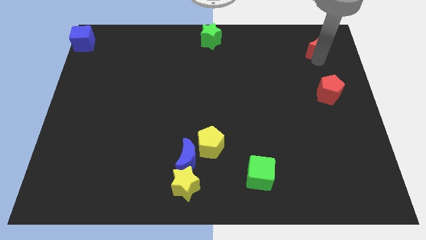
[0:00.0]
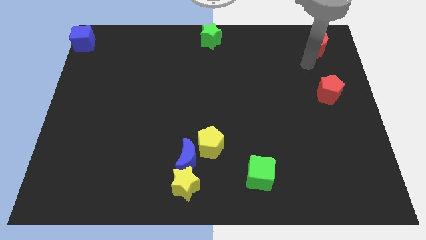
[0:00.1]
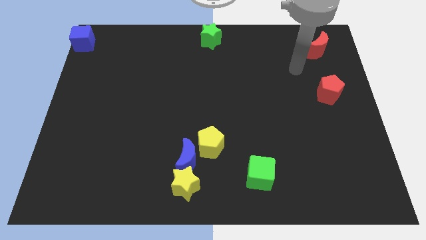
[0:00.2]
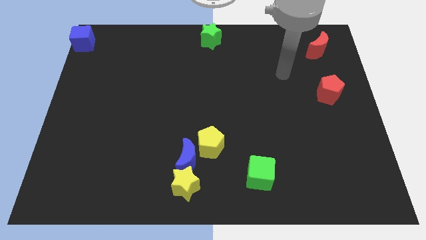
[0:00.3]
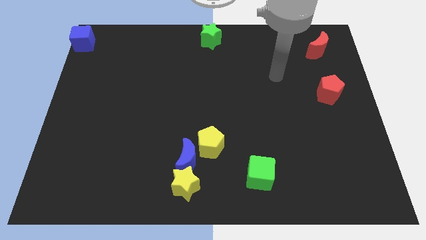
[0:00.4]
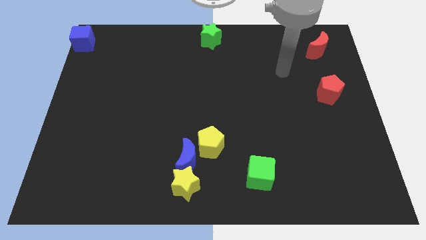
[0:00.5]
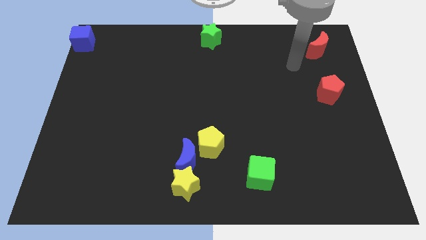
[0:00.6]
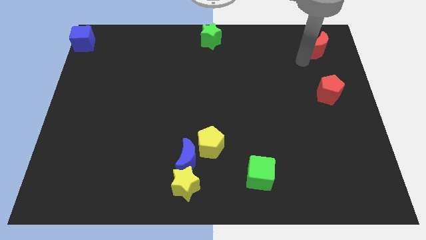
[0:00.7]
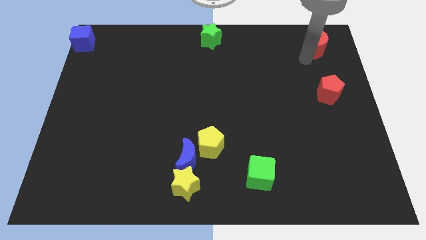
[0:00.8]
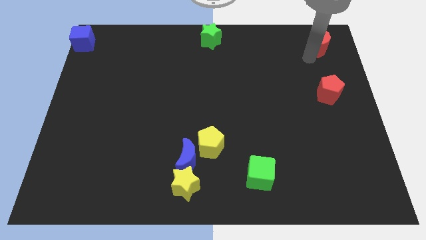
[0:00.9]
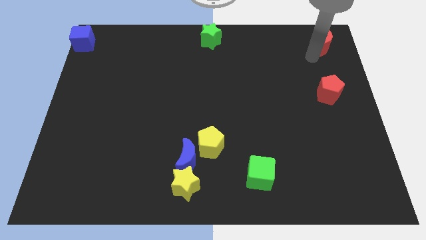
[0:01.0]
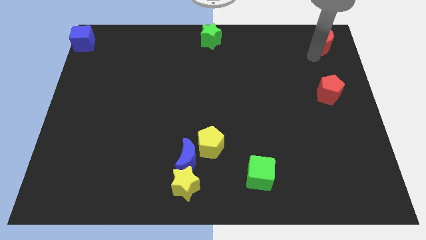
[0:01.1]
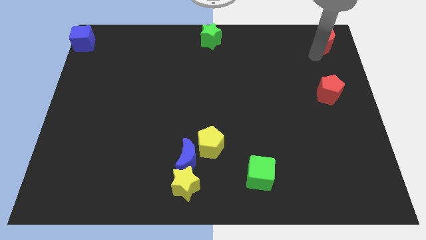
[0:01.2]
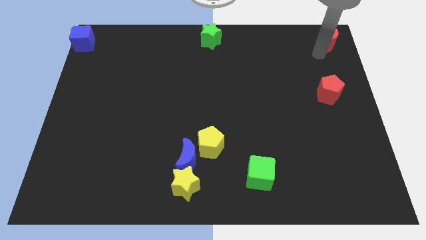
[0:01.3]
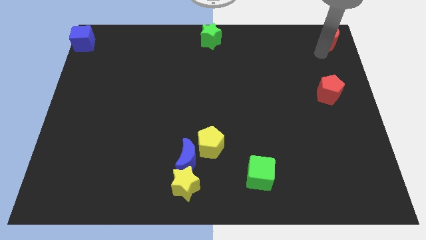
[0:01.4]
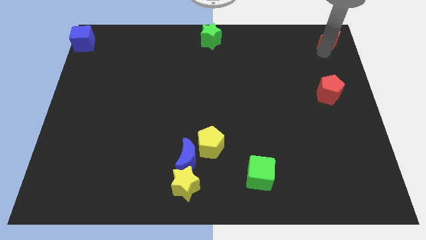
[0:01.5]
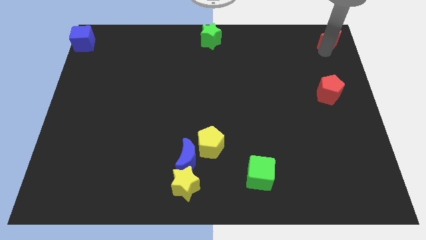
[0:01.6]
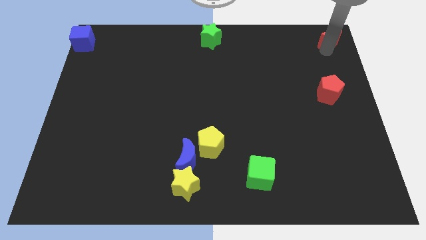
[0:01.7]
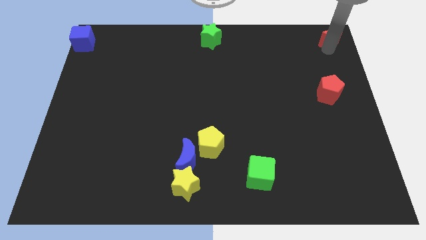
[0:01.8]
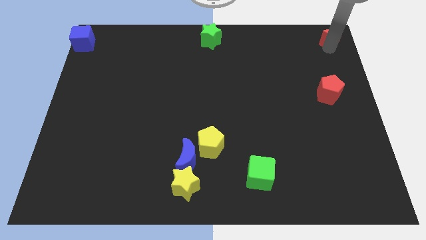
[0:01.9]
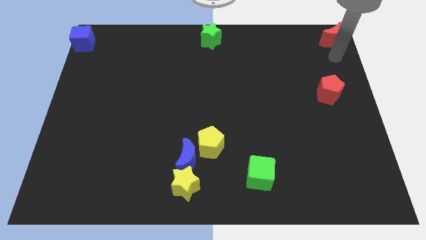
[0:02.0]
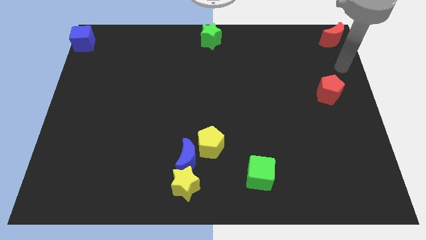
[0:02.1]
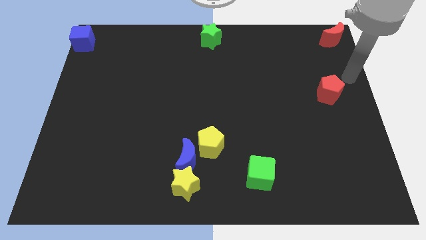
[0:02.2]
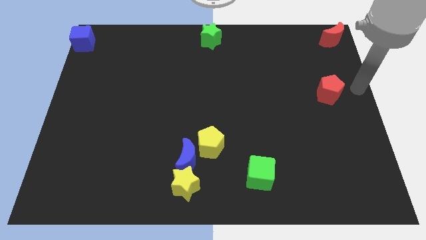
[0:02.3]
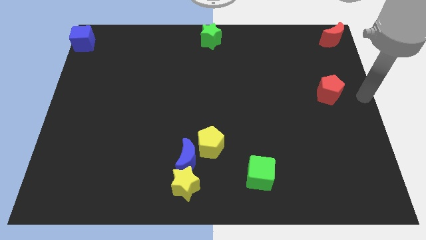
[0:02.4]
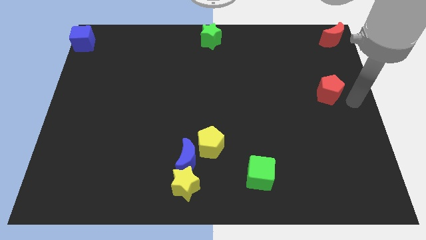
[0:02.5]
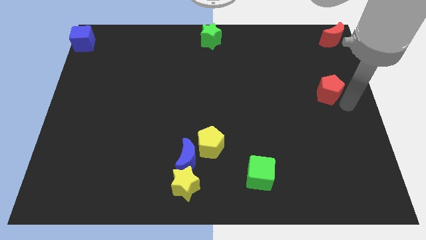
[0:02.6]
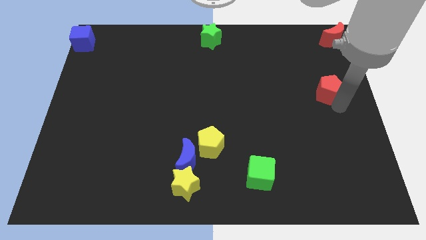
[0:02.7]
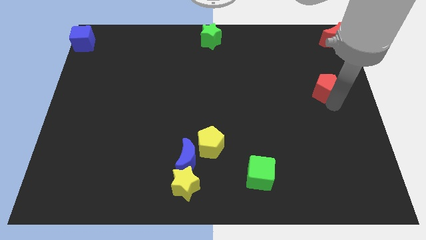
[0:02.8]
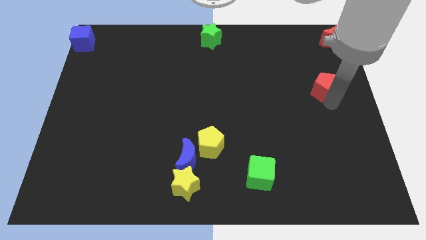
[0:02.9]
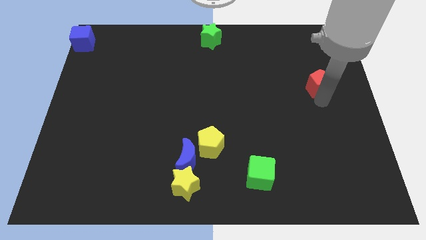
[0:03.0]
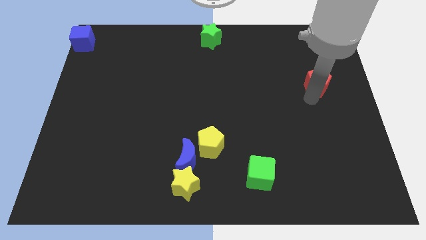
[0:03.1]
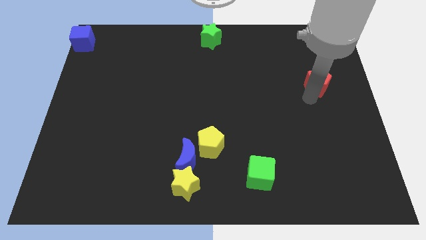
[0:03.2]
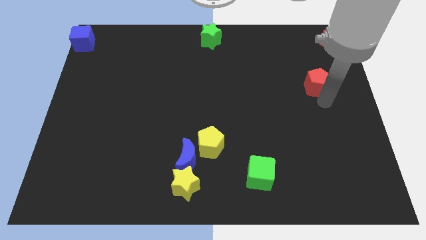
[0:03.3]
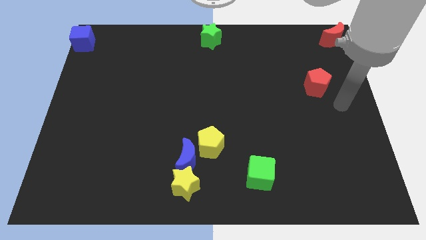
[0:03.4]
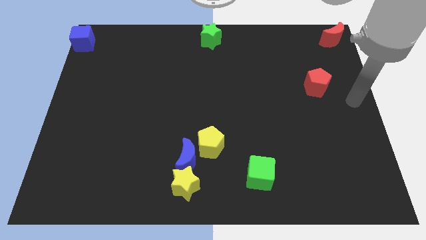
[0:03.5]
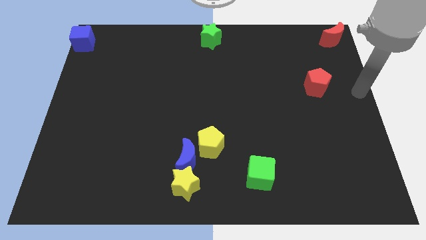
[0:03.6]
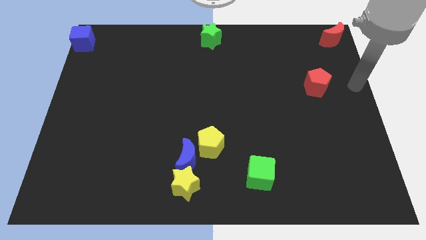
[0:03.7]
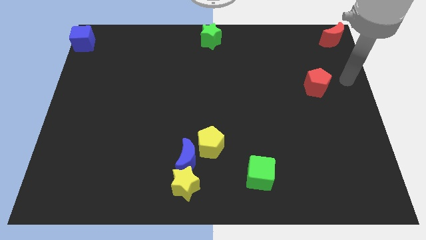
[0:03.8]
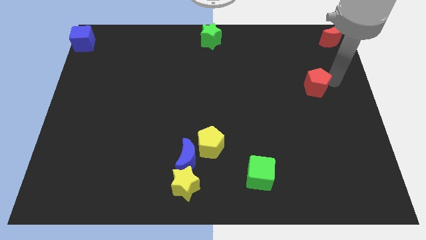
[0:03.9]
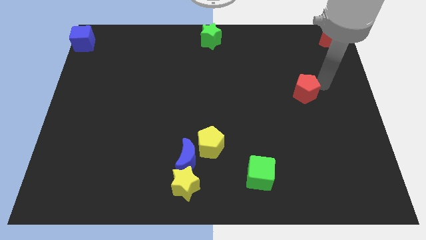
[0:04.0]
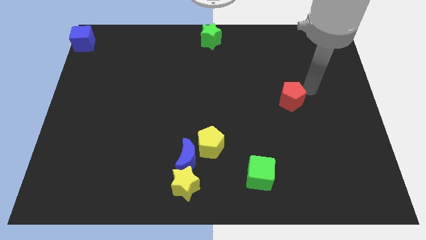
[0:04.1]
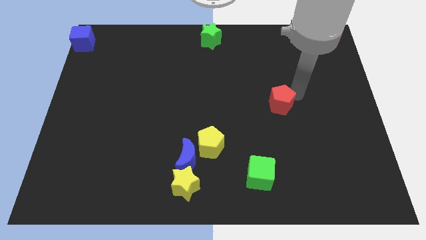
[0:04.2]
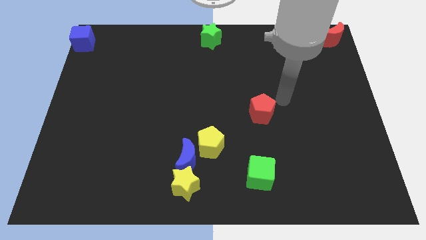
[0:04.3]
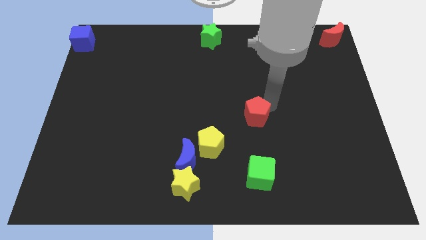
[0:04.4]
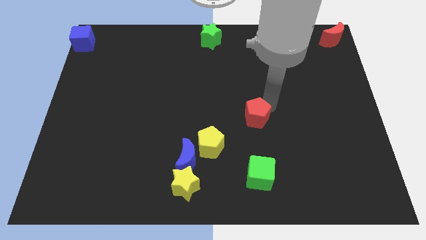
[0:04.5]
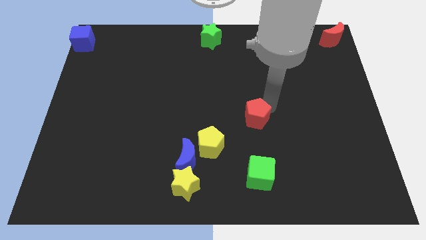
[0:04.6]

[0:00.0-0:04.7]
push the red pentagon towards the yellow pentagon

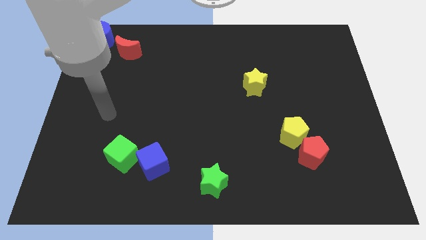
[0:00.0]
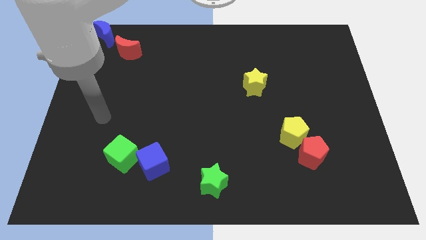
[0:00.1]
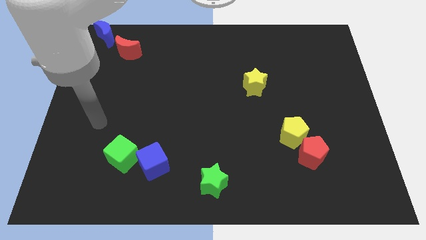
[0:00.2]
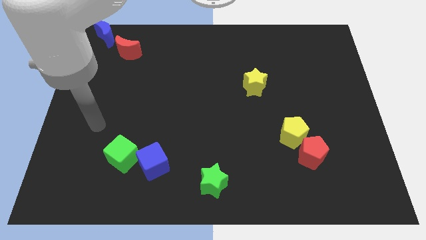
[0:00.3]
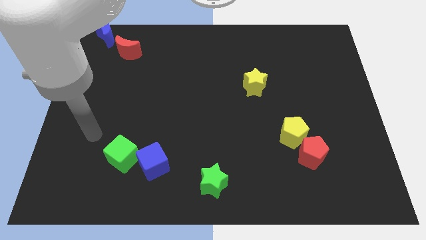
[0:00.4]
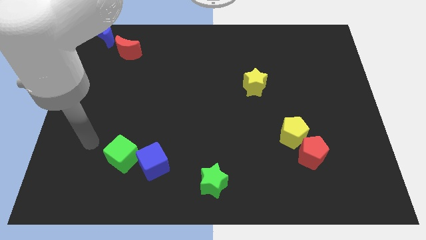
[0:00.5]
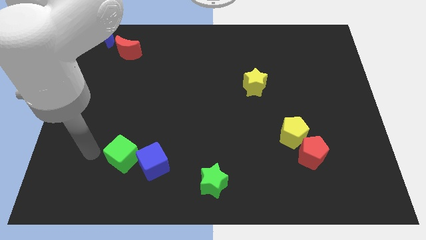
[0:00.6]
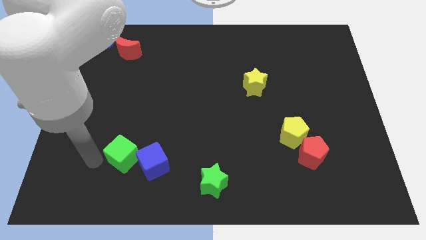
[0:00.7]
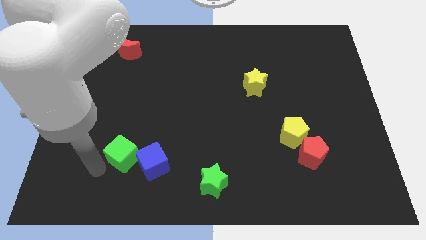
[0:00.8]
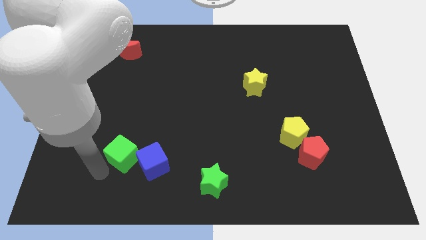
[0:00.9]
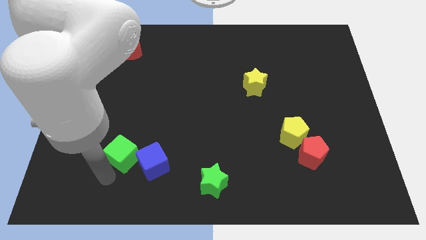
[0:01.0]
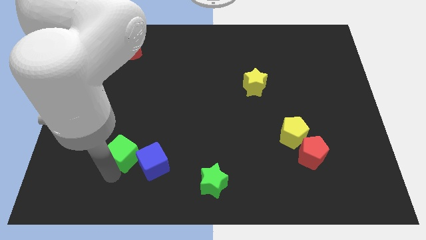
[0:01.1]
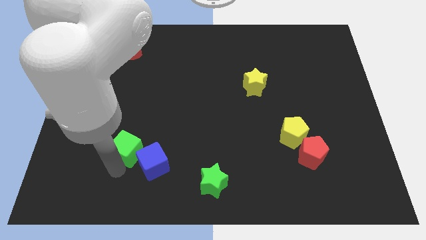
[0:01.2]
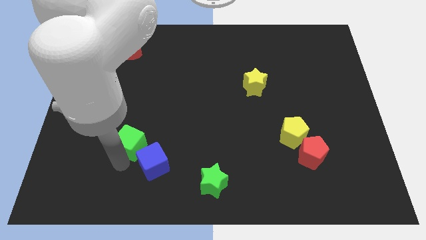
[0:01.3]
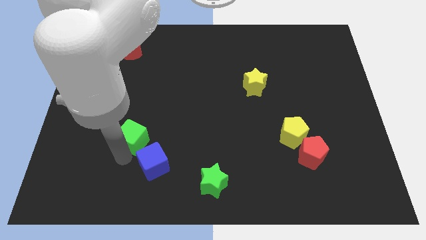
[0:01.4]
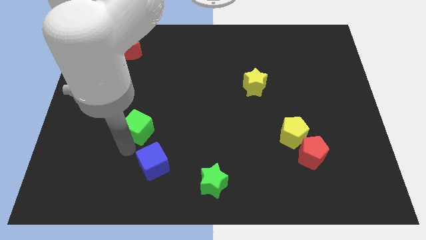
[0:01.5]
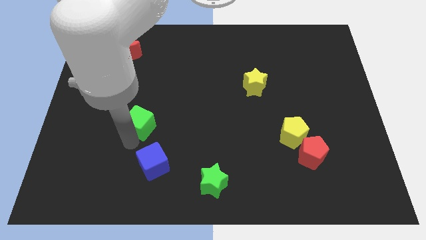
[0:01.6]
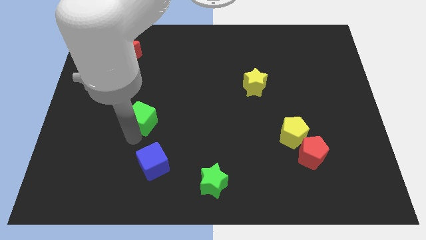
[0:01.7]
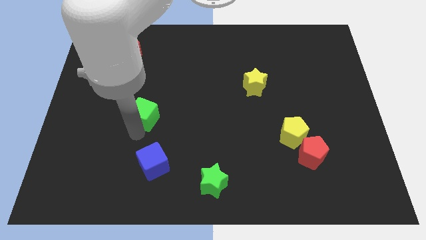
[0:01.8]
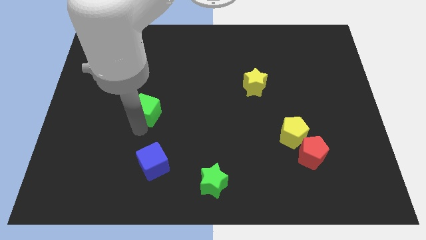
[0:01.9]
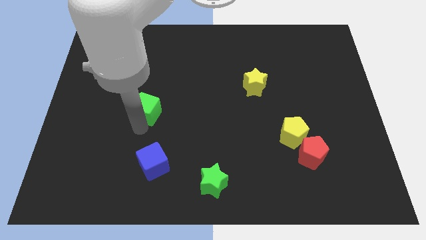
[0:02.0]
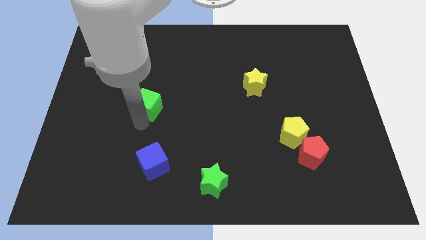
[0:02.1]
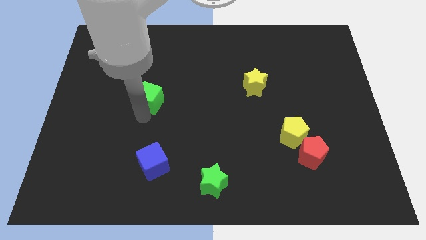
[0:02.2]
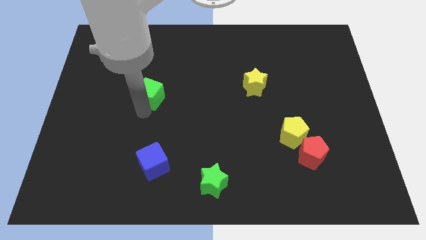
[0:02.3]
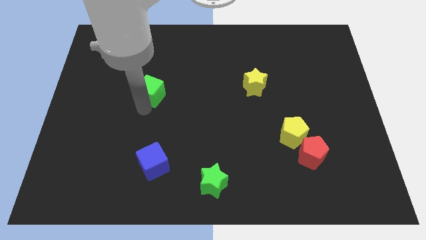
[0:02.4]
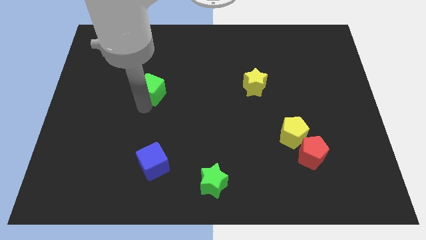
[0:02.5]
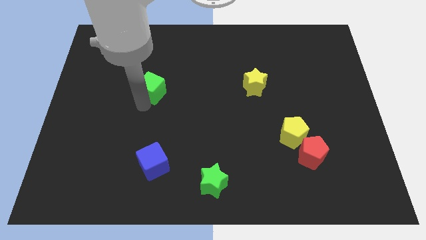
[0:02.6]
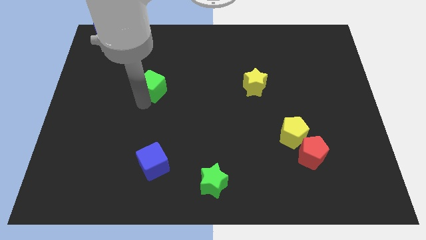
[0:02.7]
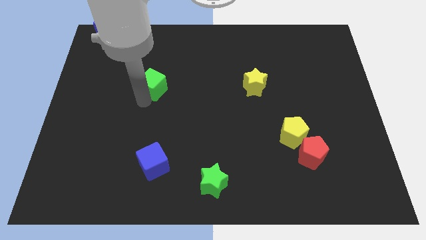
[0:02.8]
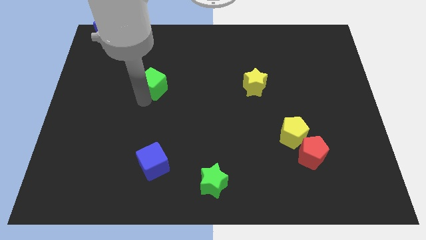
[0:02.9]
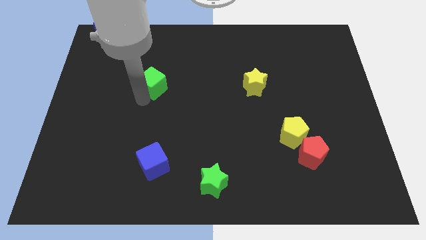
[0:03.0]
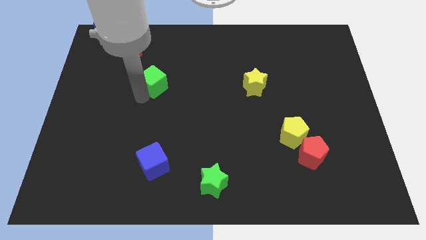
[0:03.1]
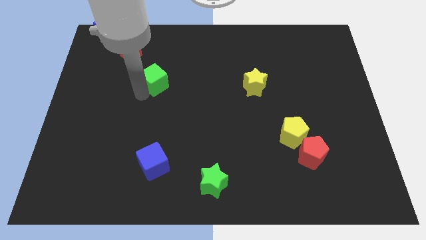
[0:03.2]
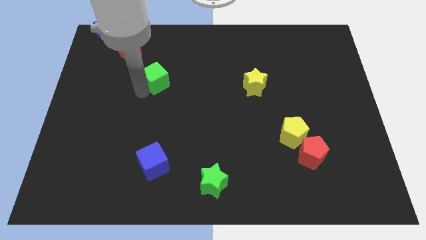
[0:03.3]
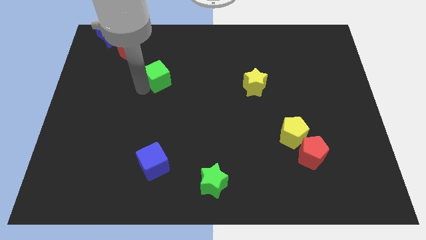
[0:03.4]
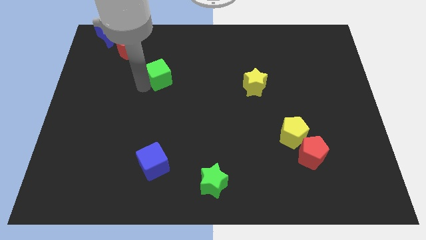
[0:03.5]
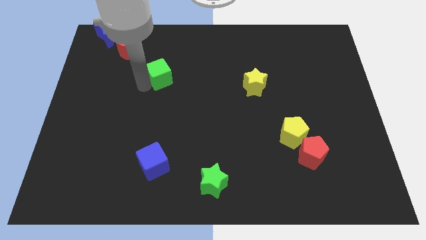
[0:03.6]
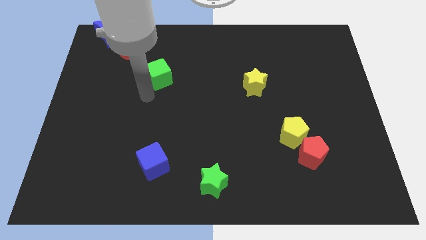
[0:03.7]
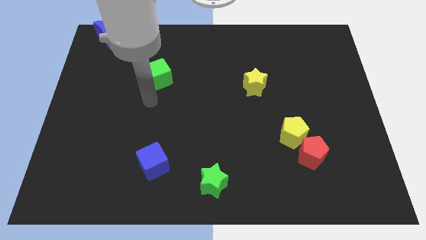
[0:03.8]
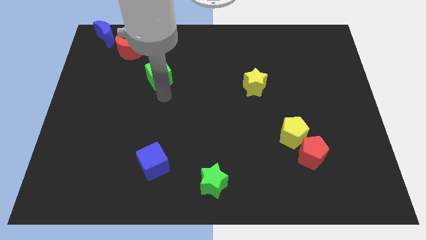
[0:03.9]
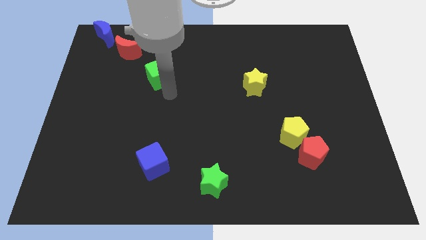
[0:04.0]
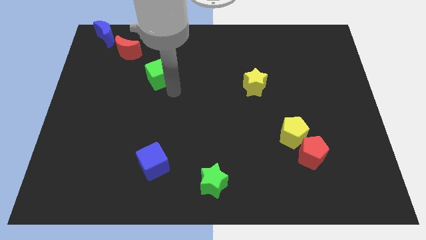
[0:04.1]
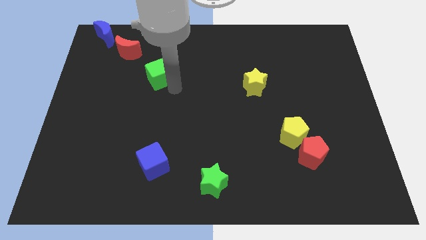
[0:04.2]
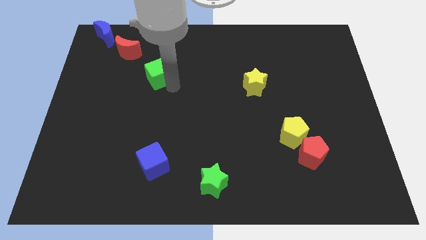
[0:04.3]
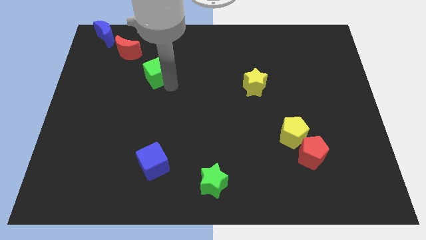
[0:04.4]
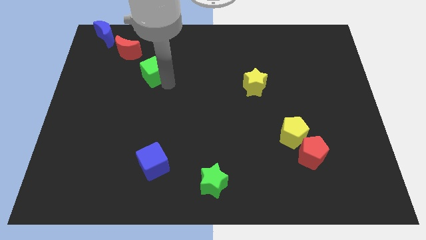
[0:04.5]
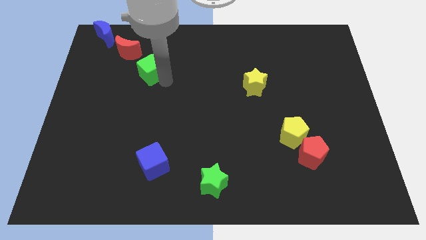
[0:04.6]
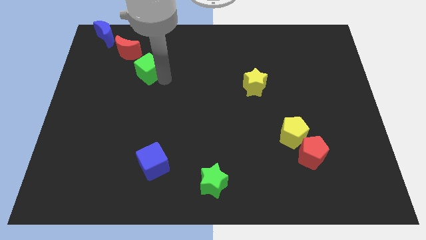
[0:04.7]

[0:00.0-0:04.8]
separate green cube from blue cube
